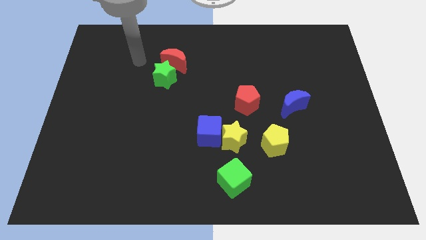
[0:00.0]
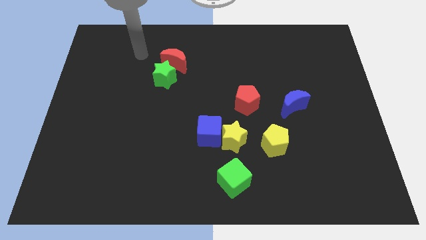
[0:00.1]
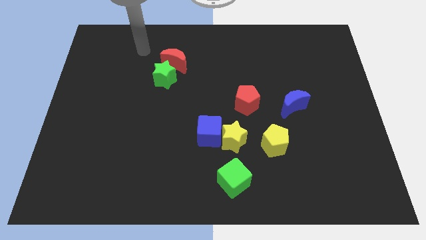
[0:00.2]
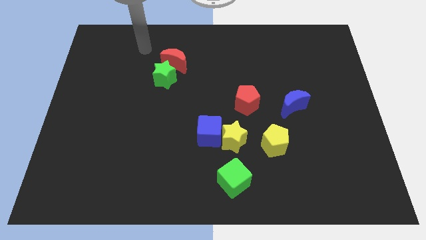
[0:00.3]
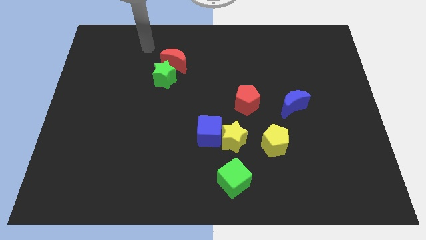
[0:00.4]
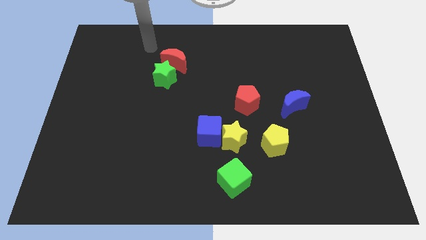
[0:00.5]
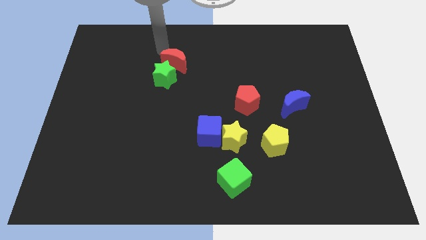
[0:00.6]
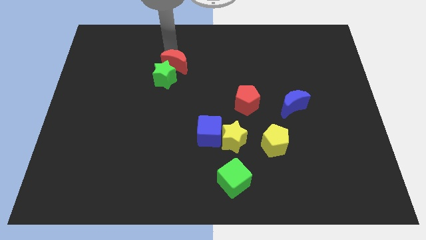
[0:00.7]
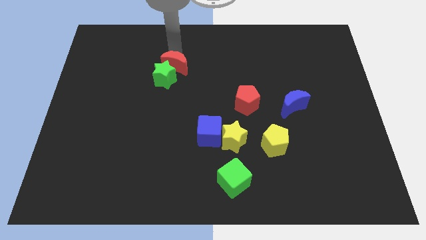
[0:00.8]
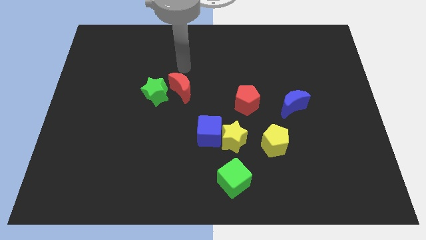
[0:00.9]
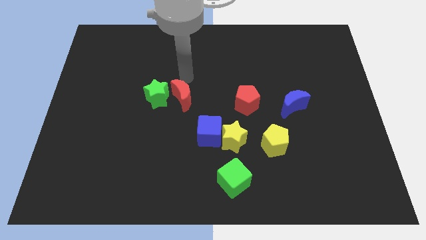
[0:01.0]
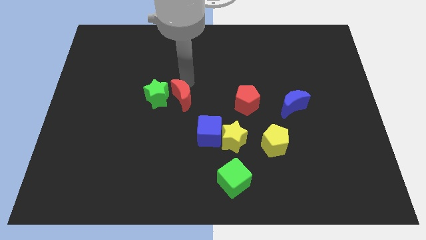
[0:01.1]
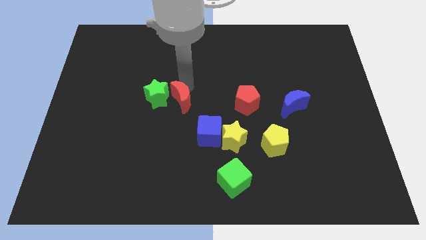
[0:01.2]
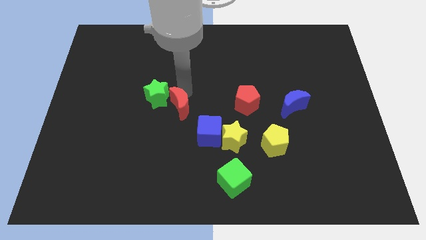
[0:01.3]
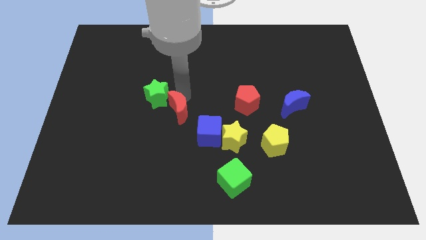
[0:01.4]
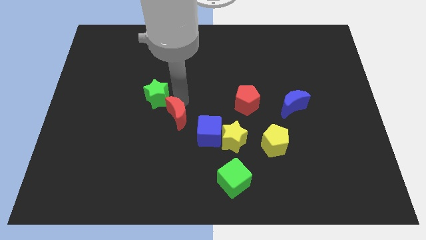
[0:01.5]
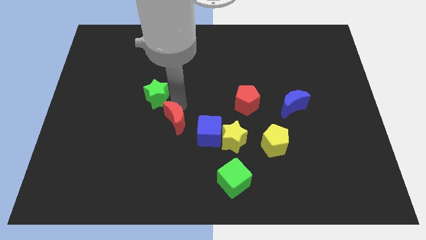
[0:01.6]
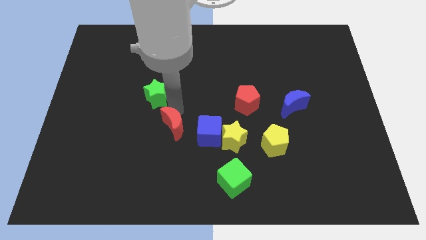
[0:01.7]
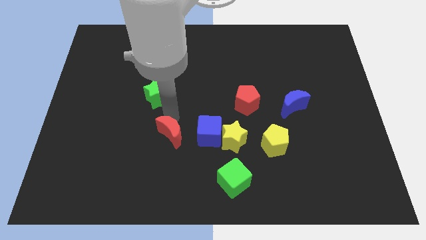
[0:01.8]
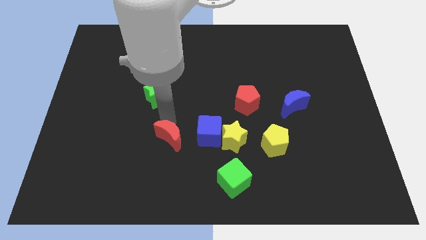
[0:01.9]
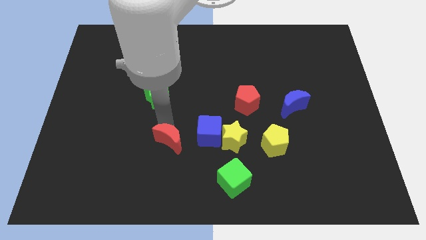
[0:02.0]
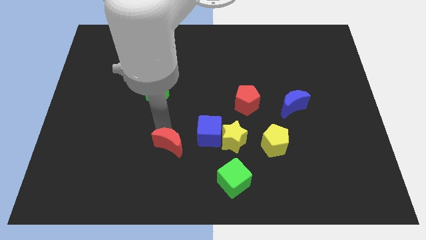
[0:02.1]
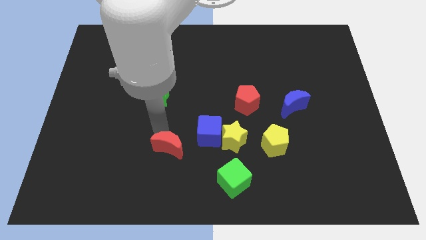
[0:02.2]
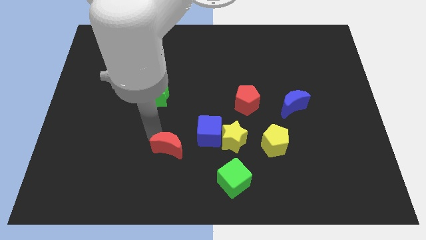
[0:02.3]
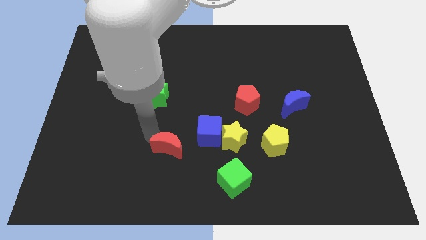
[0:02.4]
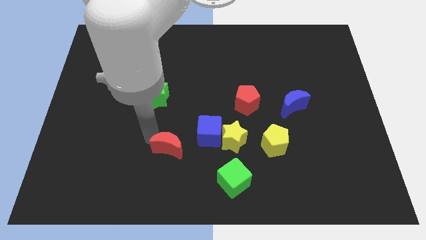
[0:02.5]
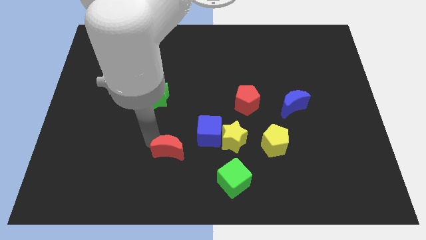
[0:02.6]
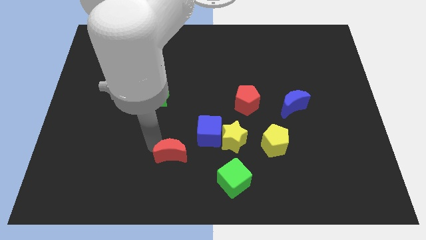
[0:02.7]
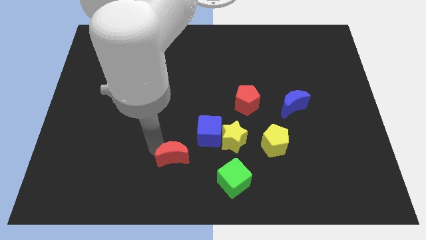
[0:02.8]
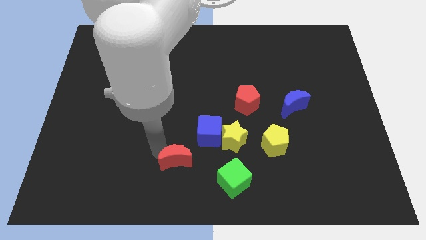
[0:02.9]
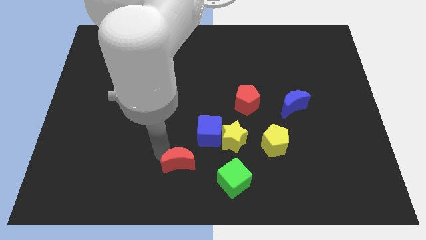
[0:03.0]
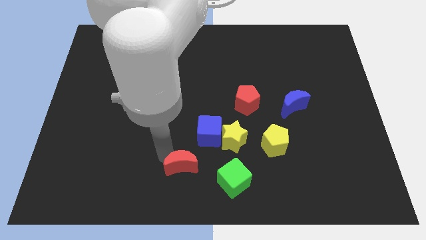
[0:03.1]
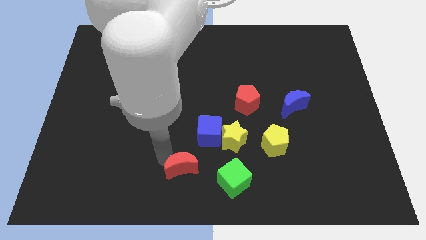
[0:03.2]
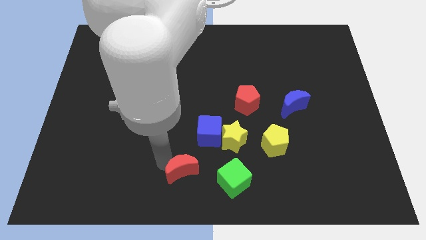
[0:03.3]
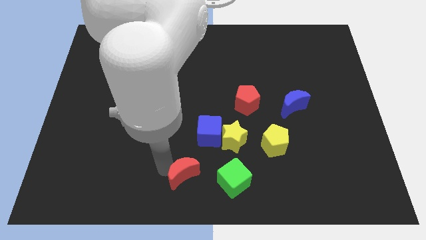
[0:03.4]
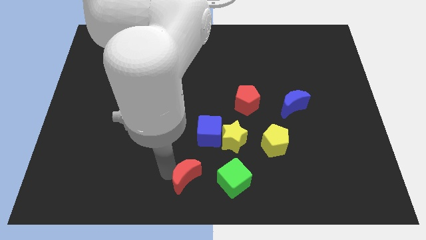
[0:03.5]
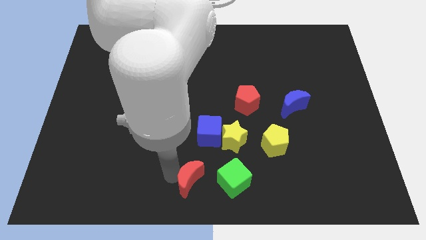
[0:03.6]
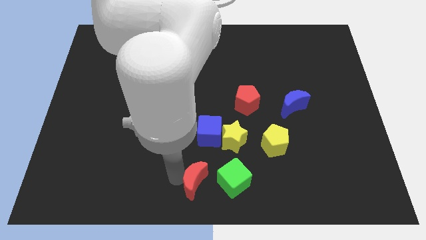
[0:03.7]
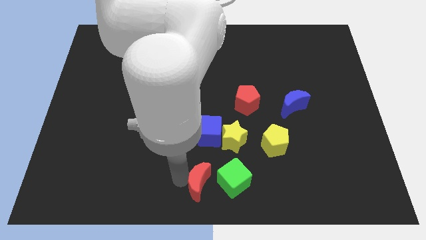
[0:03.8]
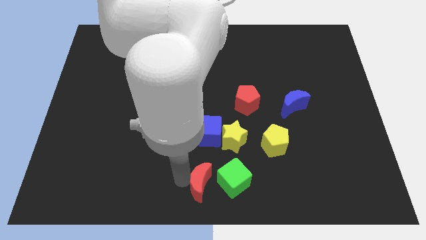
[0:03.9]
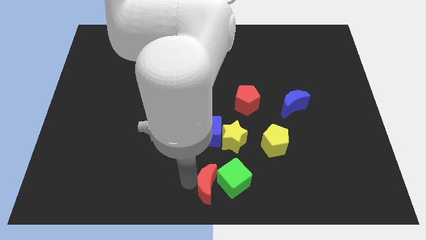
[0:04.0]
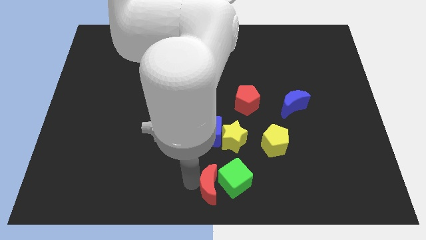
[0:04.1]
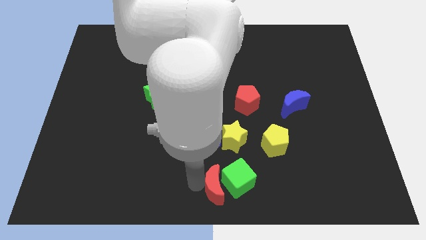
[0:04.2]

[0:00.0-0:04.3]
move the red moon towards the green cube

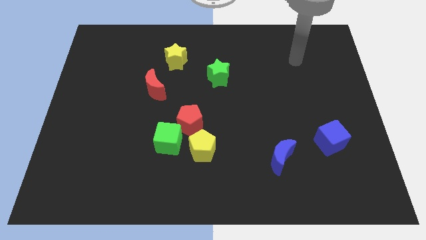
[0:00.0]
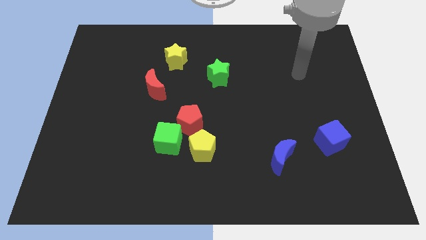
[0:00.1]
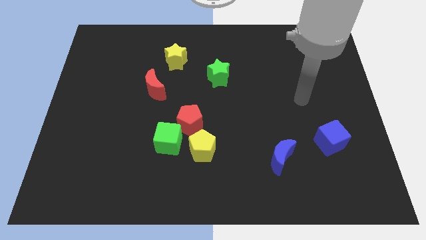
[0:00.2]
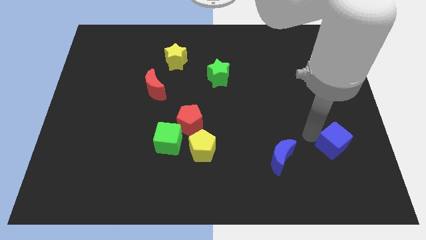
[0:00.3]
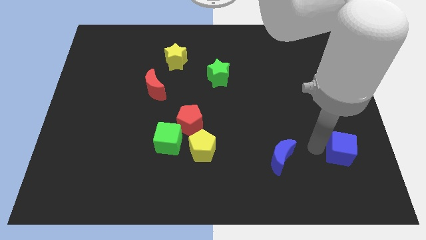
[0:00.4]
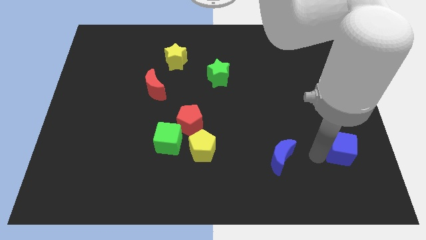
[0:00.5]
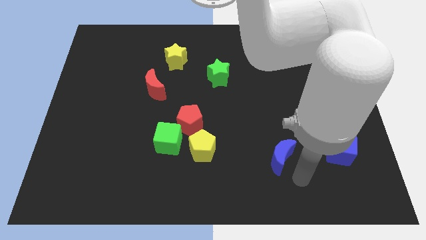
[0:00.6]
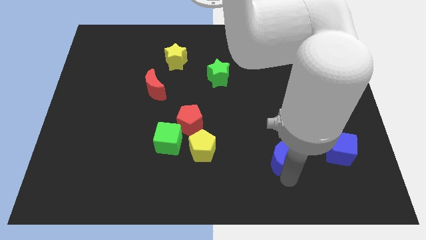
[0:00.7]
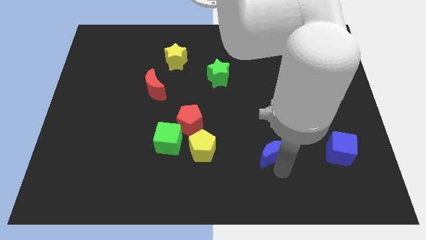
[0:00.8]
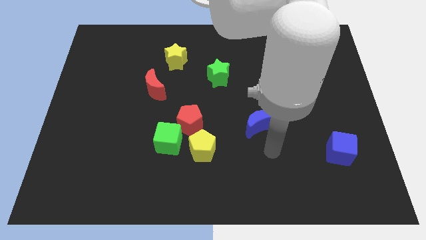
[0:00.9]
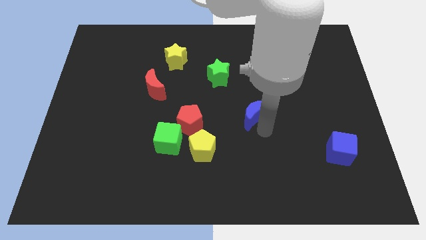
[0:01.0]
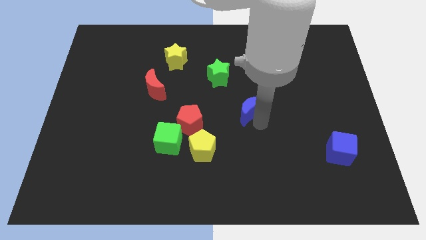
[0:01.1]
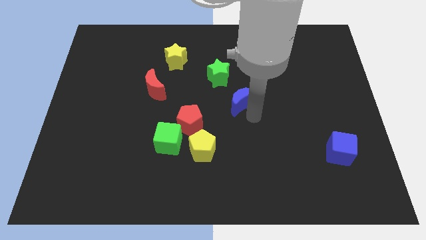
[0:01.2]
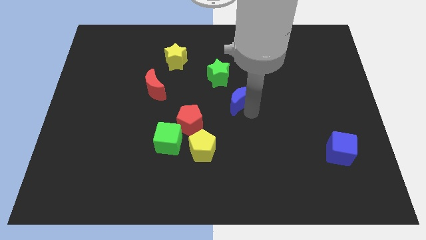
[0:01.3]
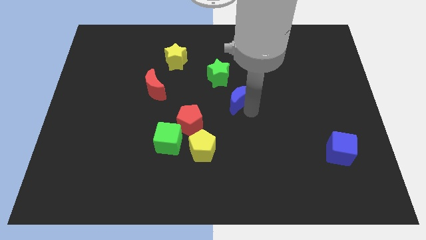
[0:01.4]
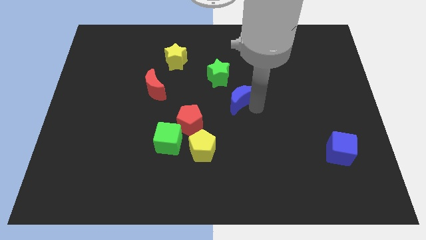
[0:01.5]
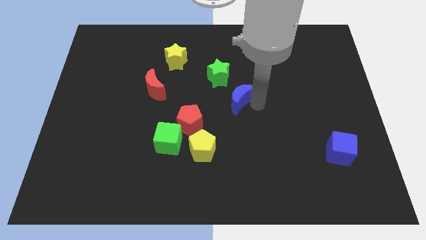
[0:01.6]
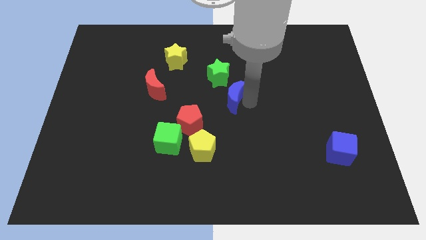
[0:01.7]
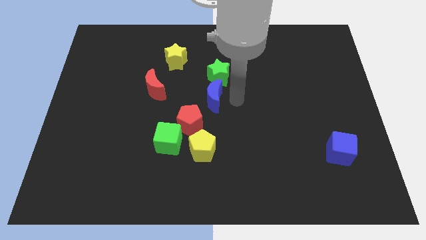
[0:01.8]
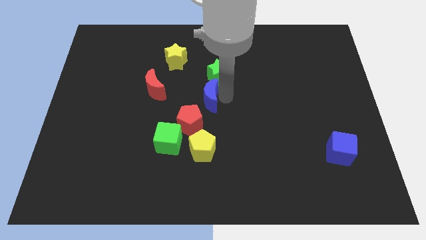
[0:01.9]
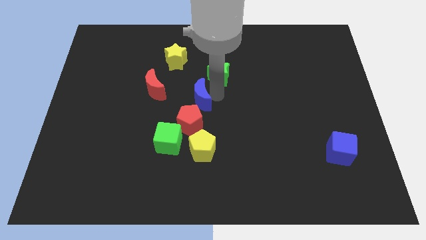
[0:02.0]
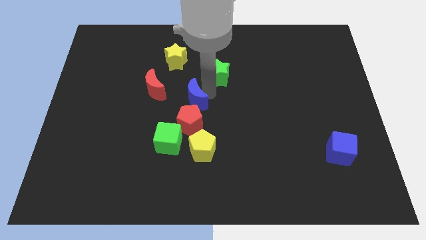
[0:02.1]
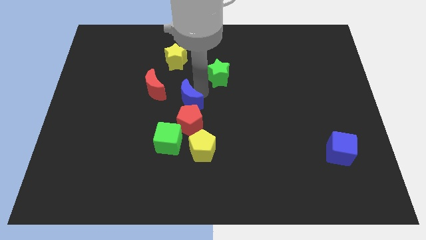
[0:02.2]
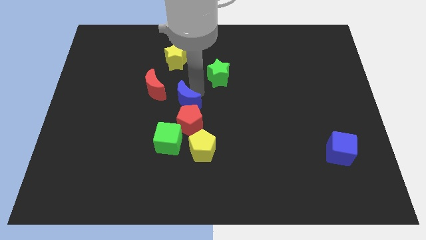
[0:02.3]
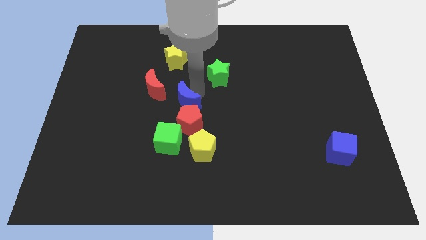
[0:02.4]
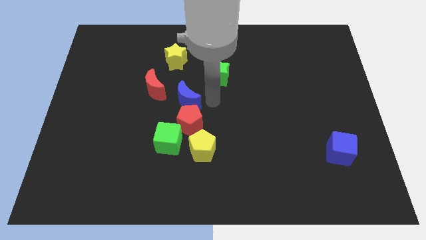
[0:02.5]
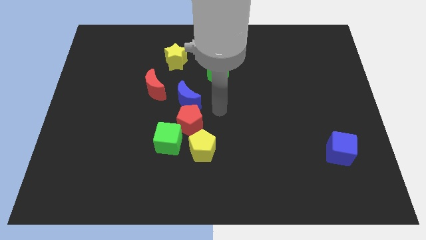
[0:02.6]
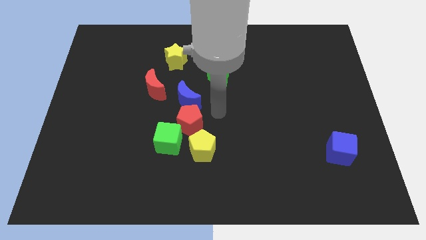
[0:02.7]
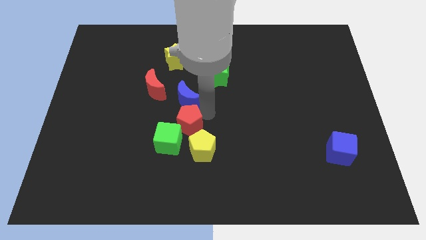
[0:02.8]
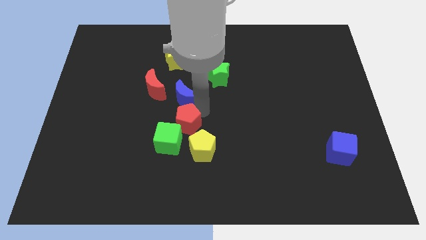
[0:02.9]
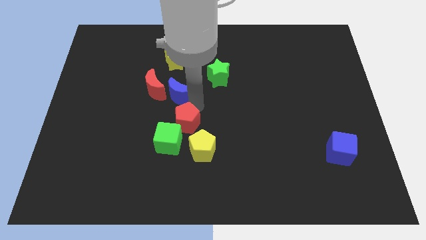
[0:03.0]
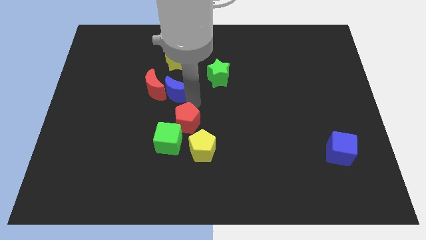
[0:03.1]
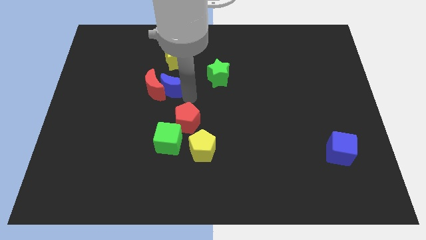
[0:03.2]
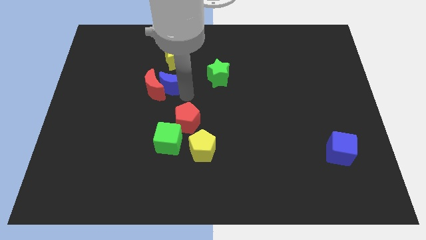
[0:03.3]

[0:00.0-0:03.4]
slide the blue moon towards the red moon

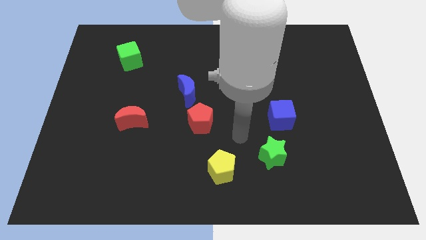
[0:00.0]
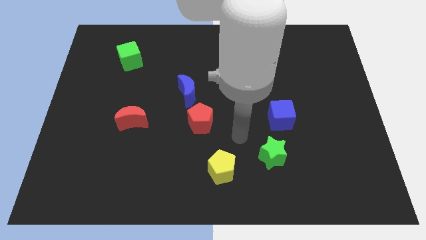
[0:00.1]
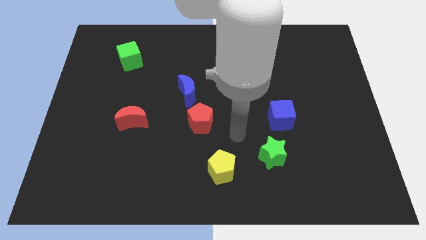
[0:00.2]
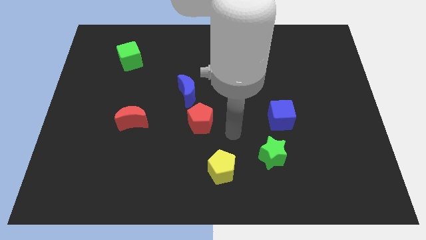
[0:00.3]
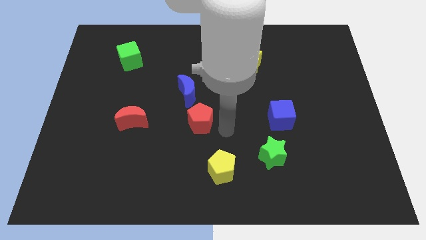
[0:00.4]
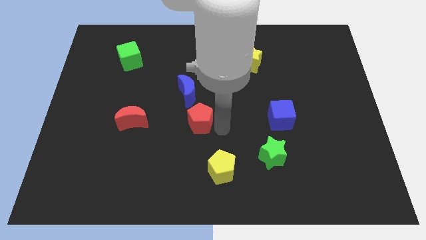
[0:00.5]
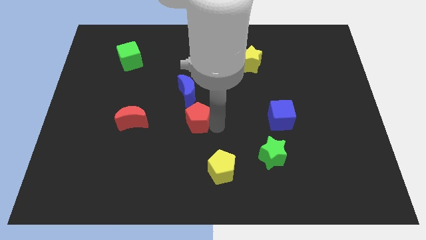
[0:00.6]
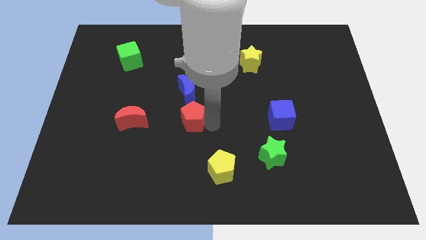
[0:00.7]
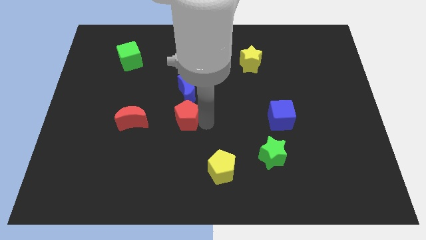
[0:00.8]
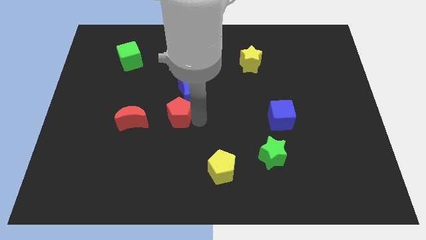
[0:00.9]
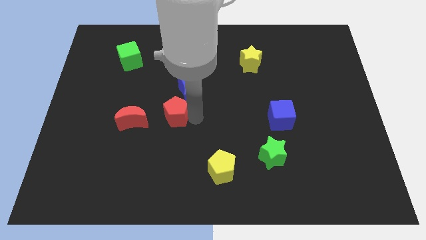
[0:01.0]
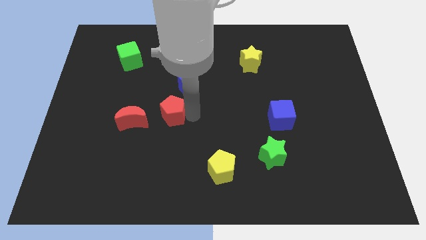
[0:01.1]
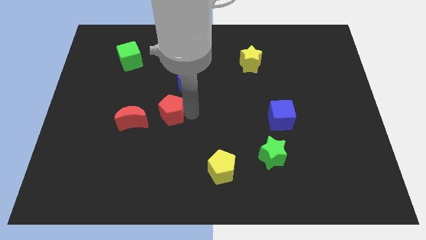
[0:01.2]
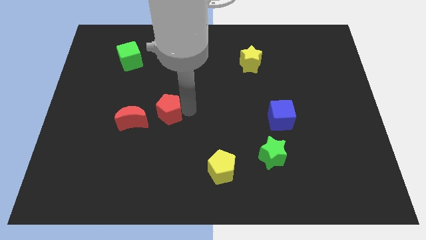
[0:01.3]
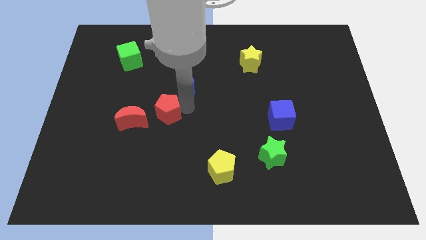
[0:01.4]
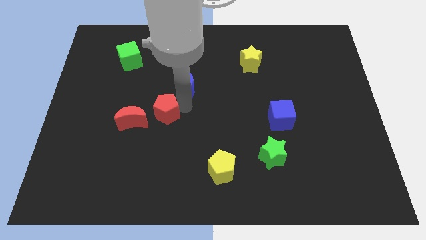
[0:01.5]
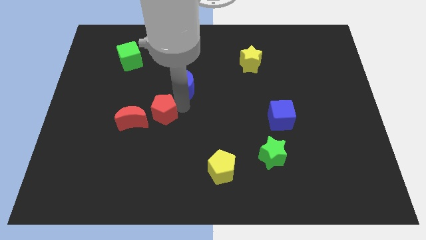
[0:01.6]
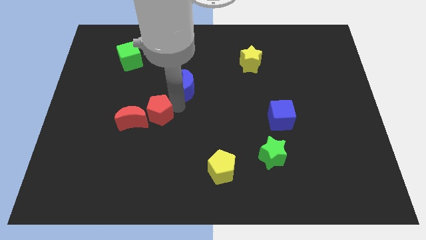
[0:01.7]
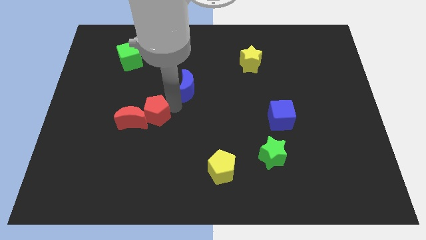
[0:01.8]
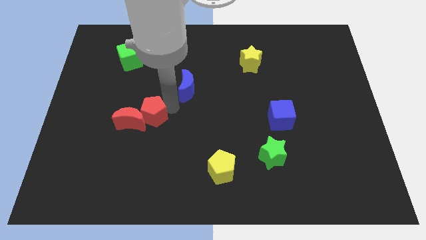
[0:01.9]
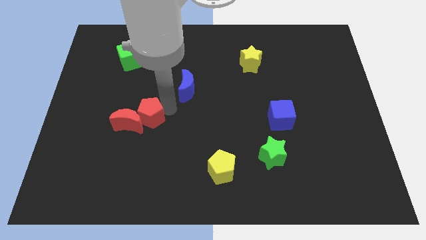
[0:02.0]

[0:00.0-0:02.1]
put the red pentagon close to the red moon
